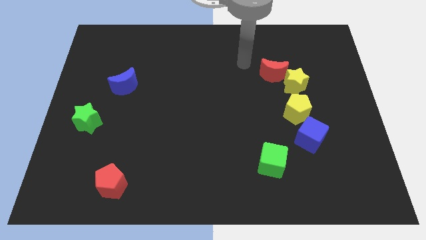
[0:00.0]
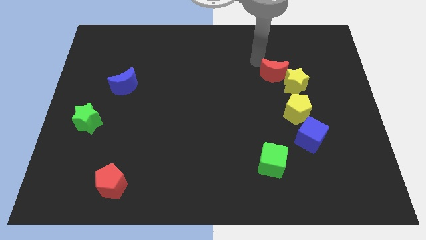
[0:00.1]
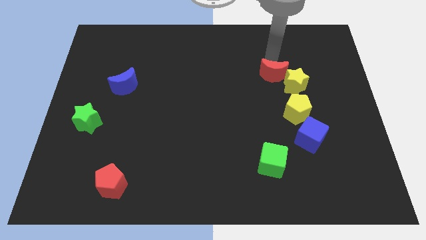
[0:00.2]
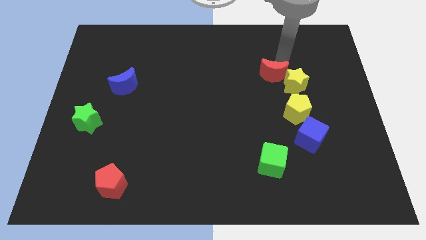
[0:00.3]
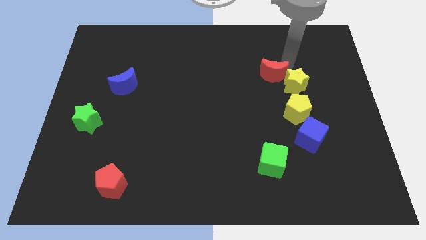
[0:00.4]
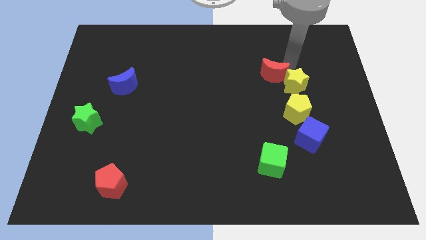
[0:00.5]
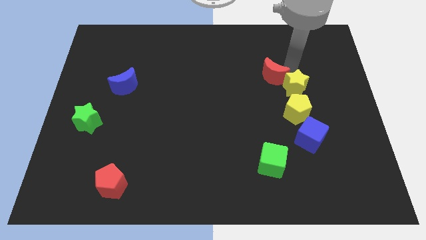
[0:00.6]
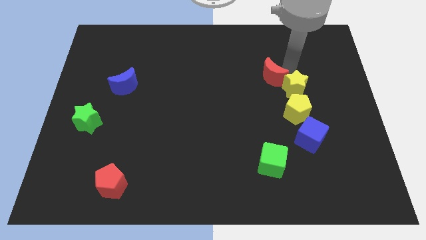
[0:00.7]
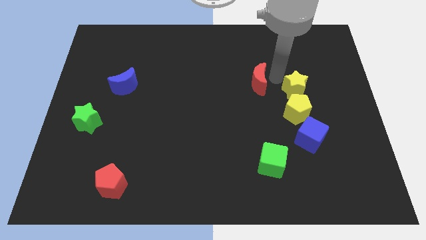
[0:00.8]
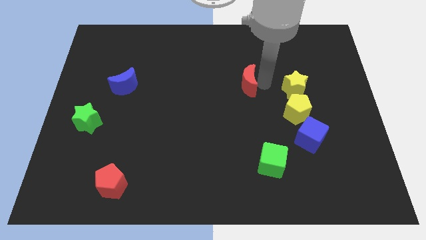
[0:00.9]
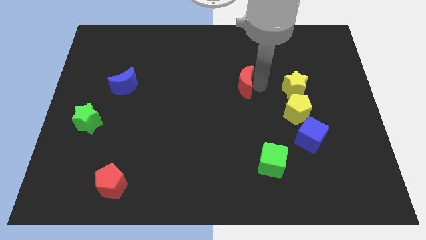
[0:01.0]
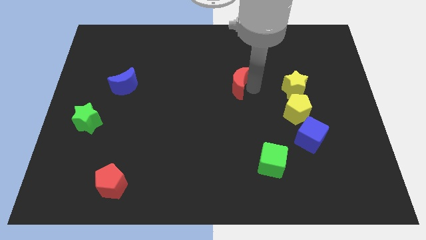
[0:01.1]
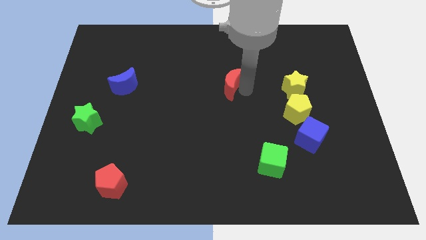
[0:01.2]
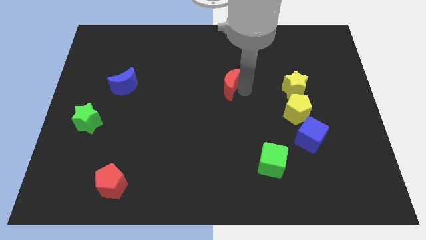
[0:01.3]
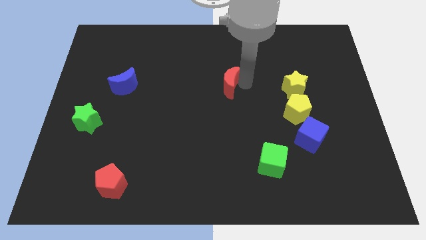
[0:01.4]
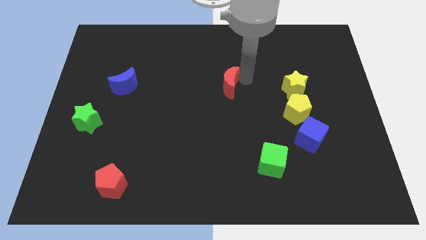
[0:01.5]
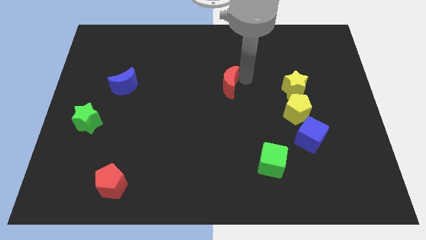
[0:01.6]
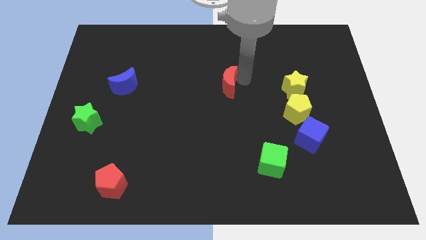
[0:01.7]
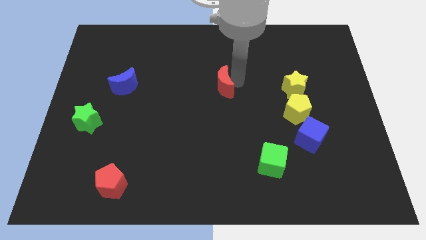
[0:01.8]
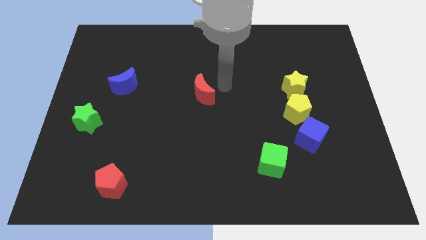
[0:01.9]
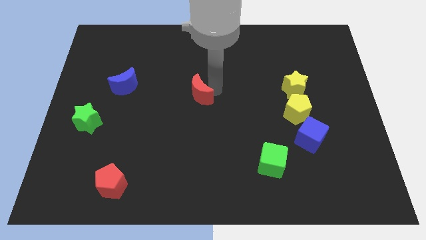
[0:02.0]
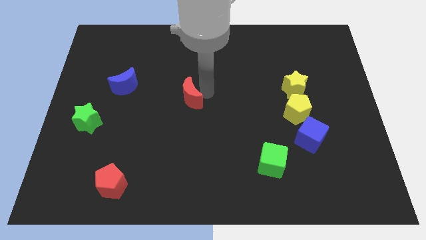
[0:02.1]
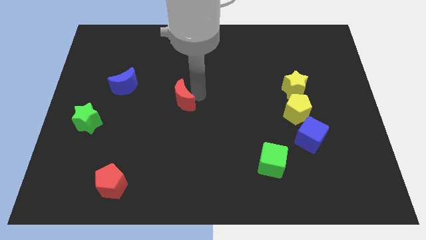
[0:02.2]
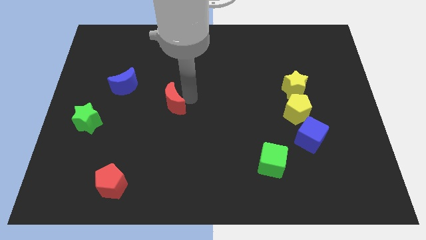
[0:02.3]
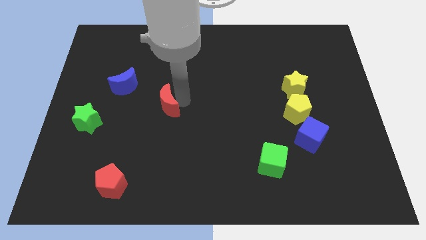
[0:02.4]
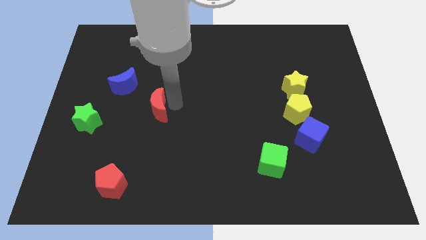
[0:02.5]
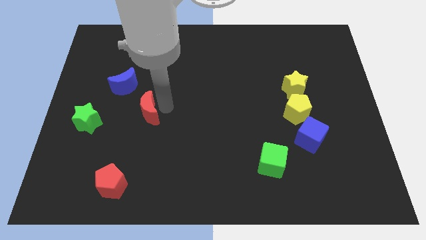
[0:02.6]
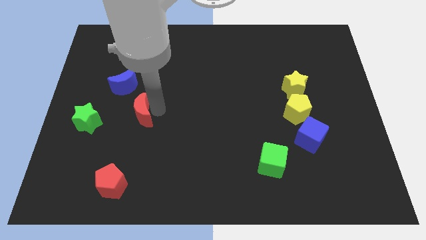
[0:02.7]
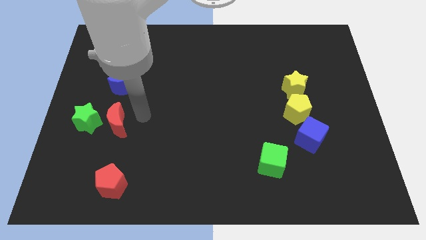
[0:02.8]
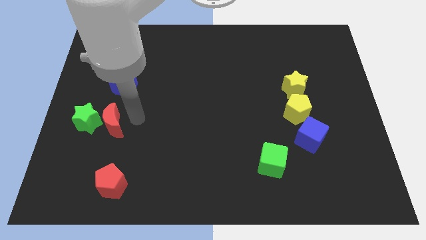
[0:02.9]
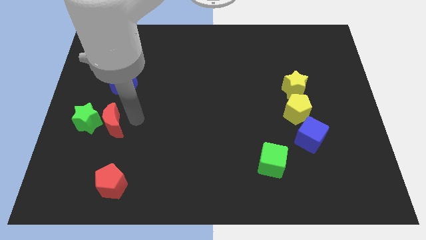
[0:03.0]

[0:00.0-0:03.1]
separate red moon from yellow star

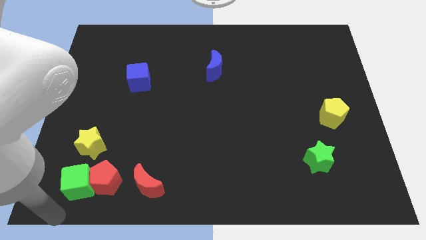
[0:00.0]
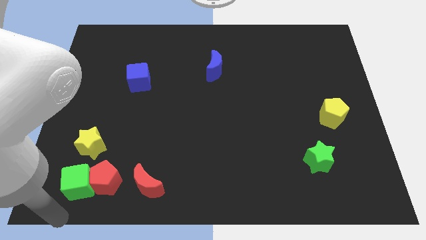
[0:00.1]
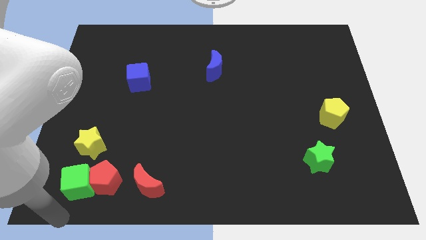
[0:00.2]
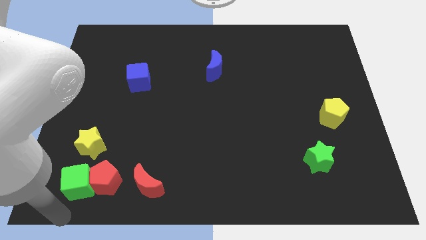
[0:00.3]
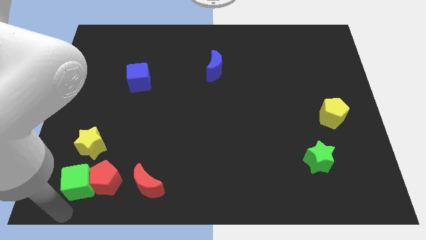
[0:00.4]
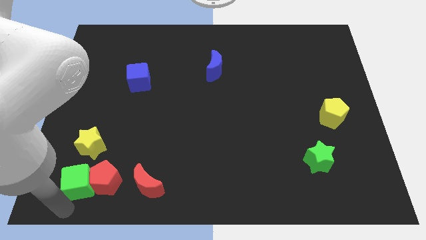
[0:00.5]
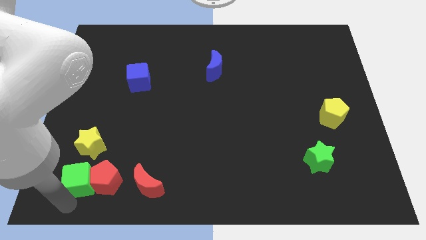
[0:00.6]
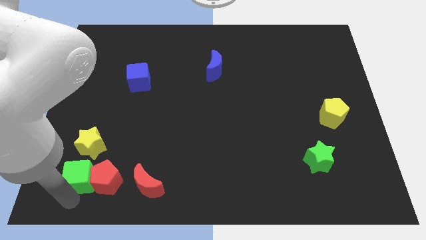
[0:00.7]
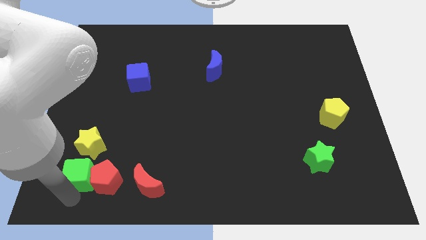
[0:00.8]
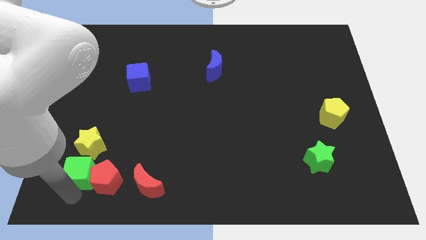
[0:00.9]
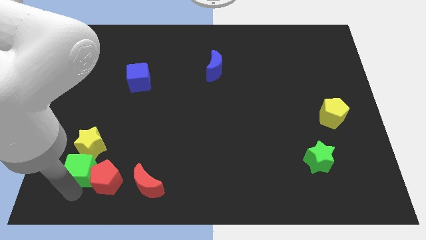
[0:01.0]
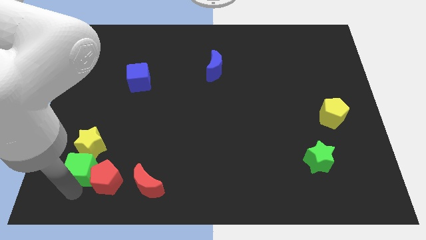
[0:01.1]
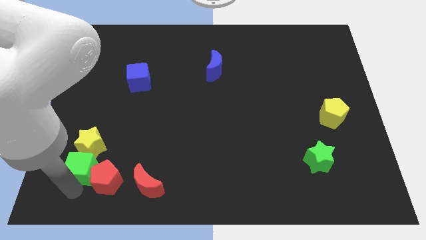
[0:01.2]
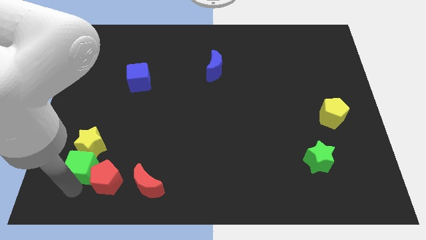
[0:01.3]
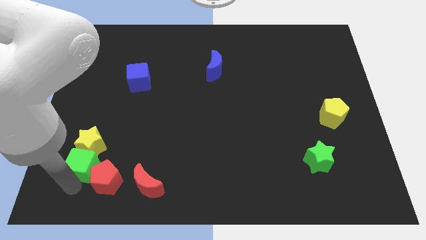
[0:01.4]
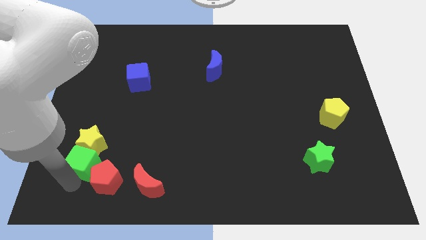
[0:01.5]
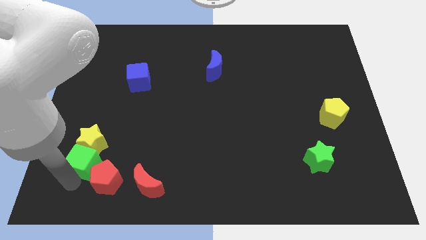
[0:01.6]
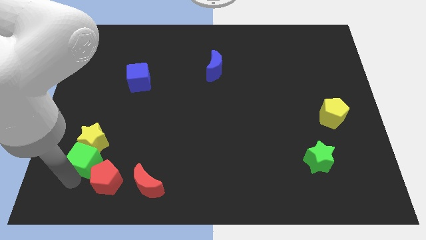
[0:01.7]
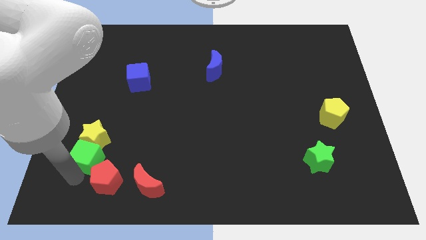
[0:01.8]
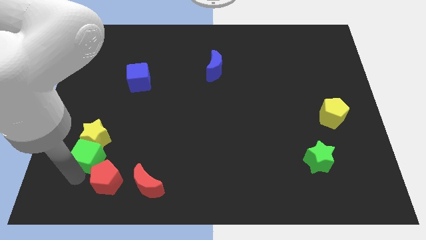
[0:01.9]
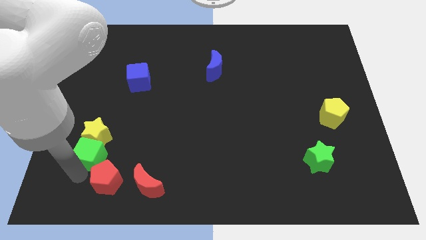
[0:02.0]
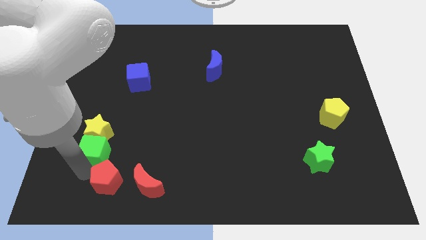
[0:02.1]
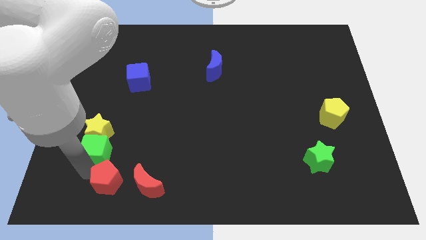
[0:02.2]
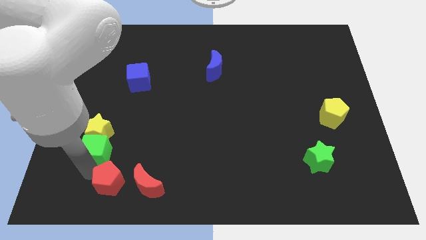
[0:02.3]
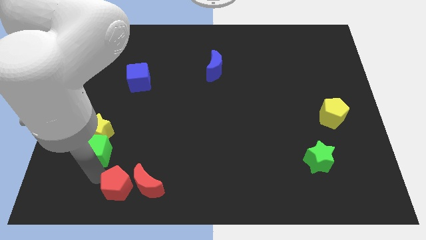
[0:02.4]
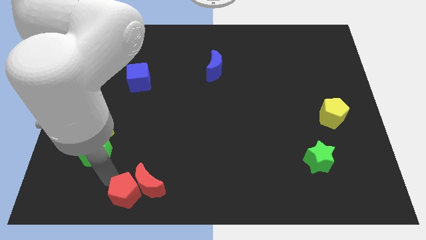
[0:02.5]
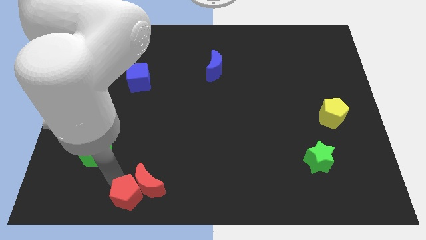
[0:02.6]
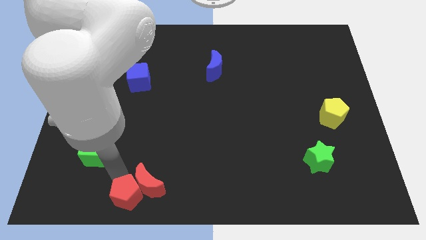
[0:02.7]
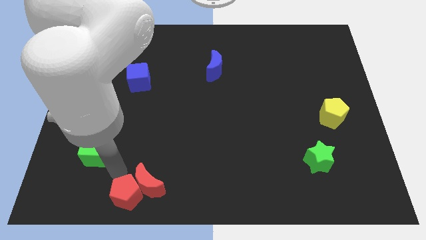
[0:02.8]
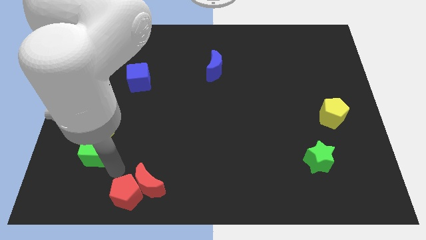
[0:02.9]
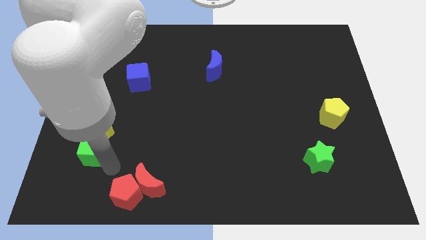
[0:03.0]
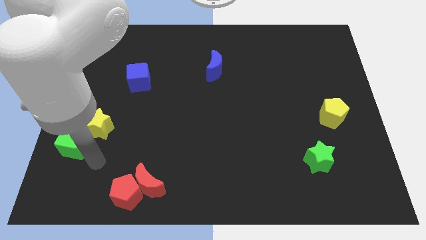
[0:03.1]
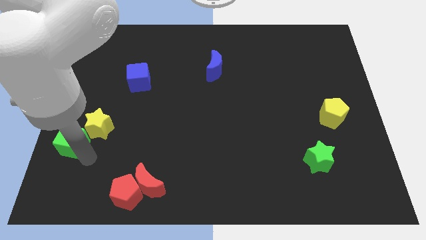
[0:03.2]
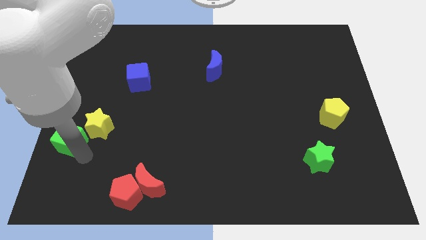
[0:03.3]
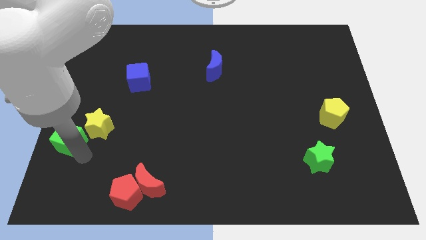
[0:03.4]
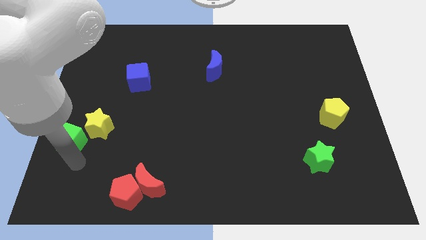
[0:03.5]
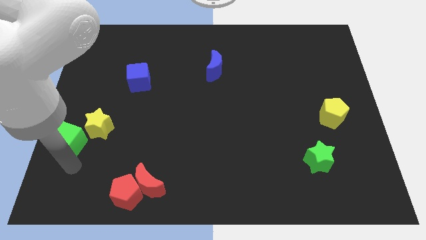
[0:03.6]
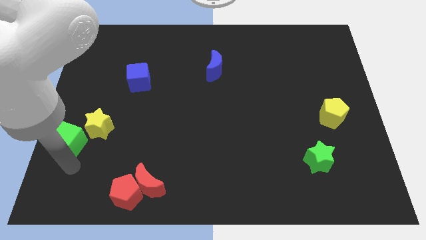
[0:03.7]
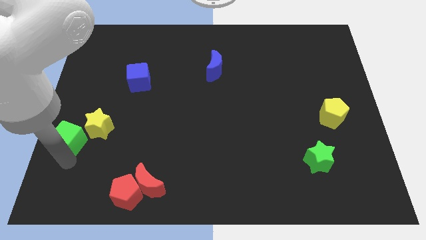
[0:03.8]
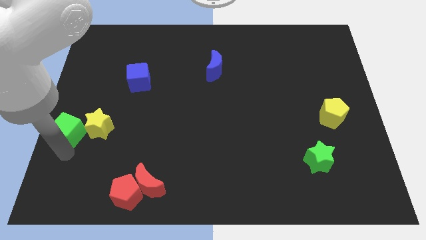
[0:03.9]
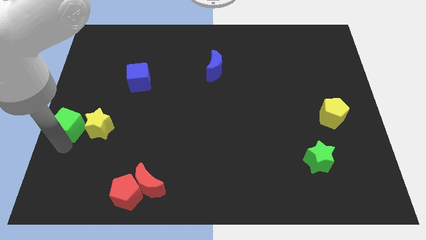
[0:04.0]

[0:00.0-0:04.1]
separate green cube from red pentagon

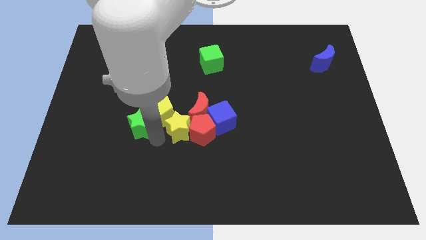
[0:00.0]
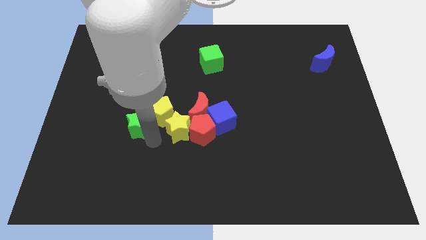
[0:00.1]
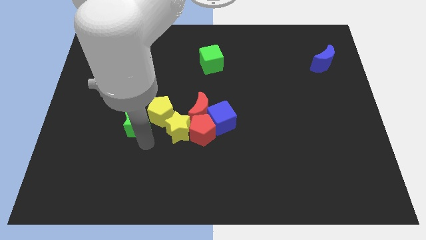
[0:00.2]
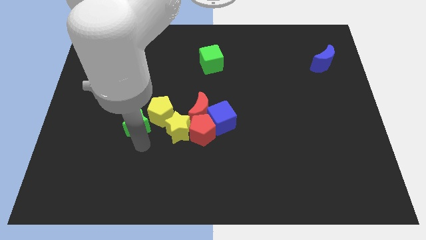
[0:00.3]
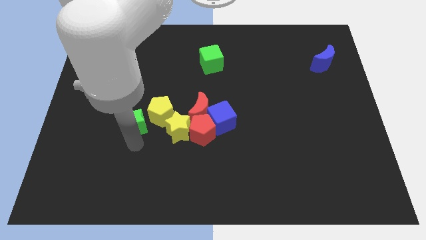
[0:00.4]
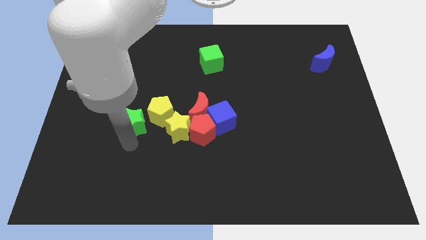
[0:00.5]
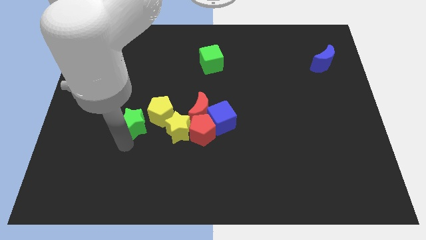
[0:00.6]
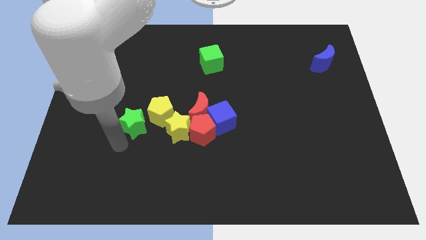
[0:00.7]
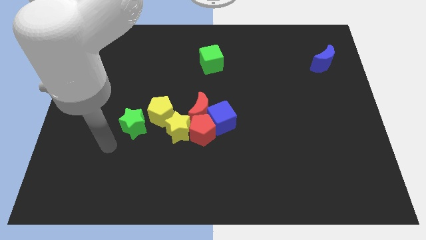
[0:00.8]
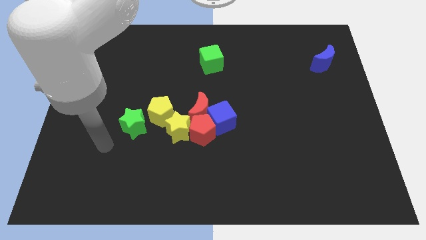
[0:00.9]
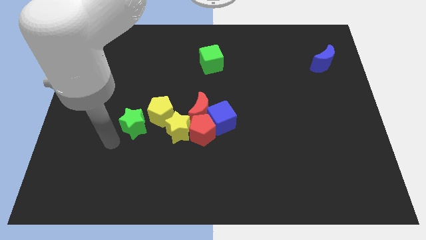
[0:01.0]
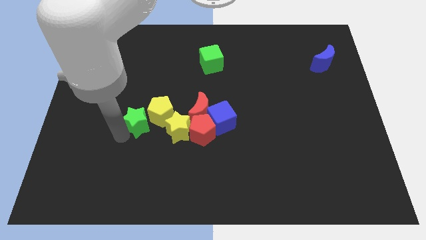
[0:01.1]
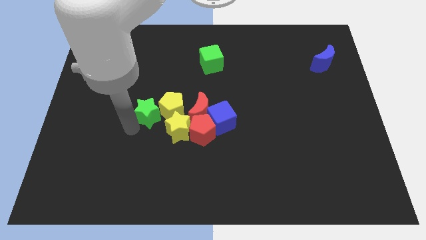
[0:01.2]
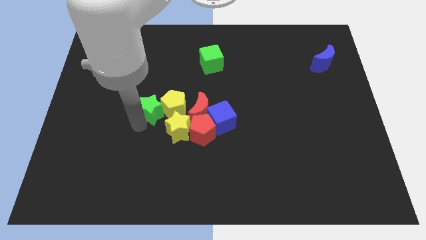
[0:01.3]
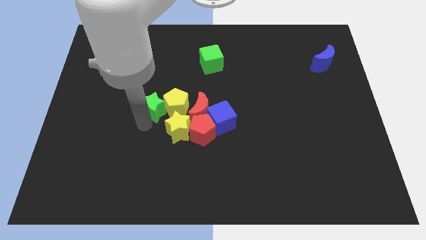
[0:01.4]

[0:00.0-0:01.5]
move green star into yellow pentagon

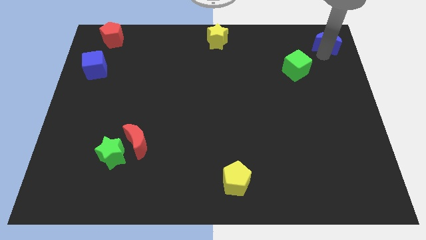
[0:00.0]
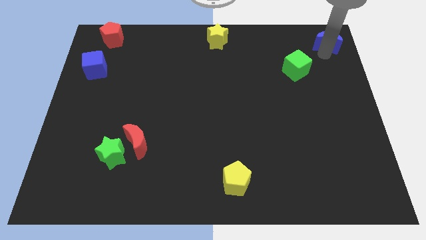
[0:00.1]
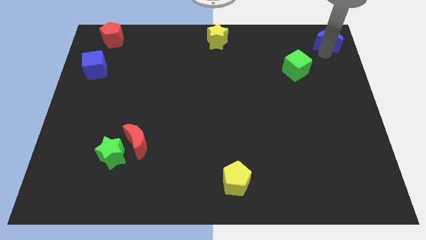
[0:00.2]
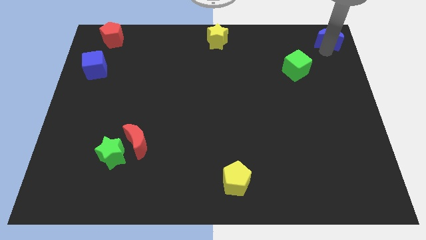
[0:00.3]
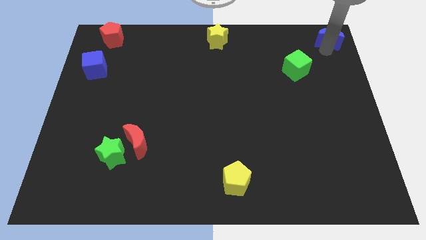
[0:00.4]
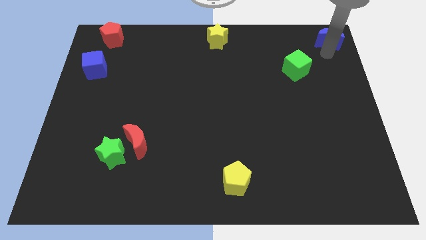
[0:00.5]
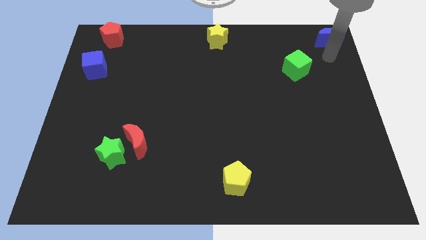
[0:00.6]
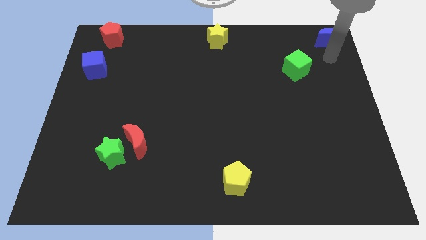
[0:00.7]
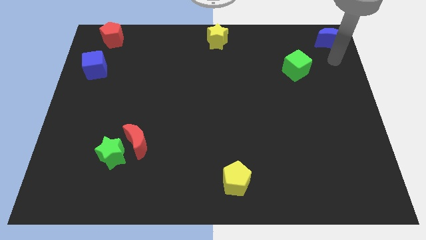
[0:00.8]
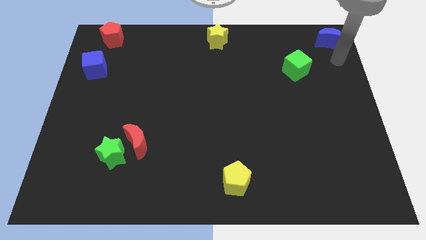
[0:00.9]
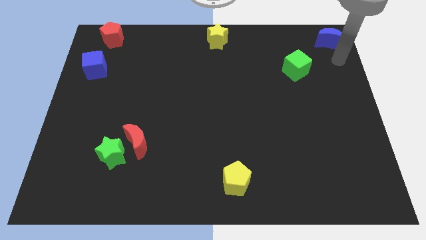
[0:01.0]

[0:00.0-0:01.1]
move the blue crescent to the top right of the board
